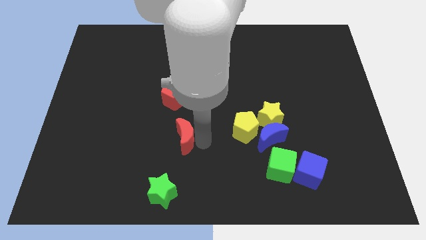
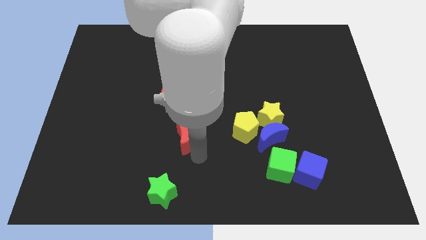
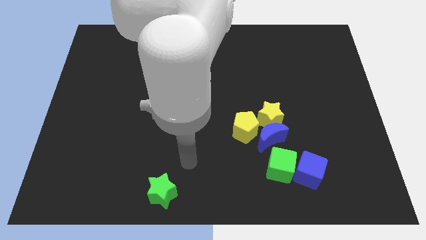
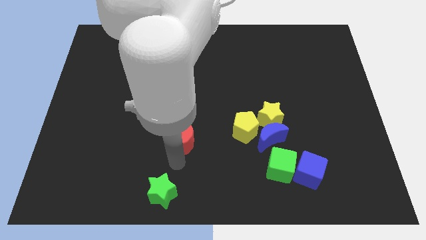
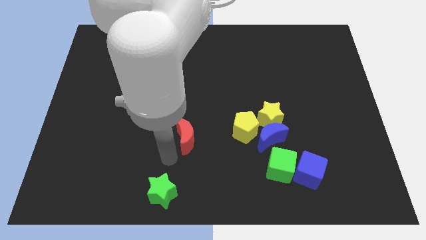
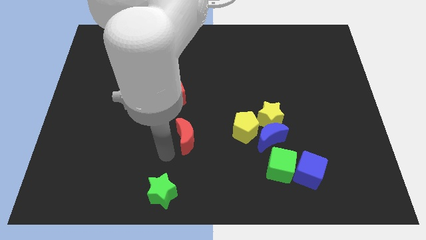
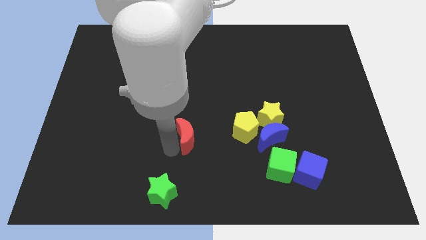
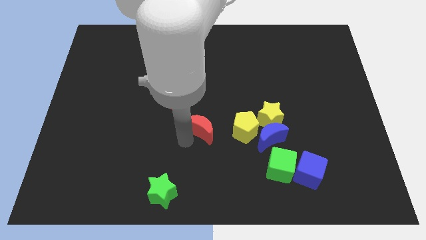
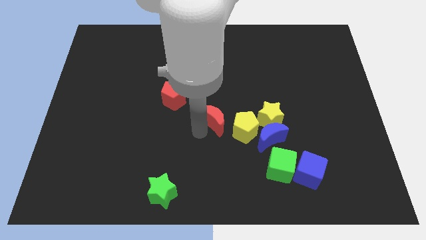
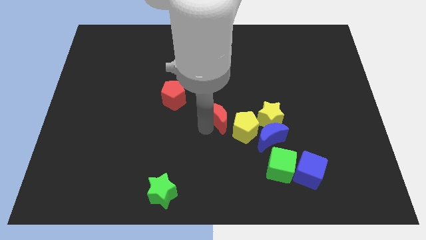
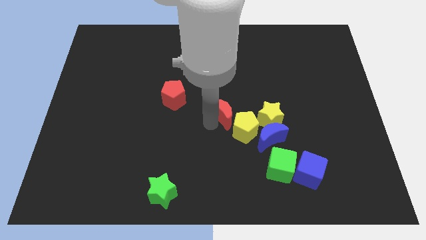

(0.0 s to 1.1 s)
place red moon to the center

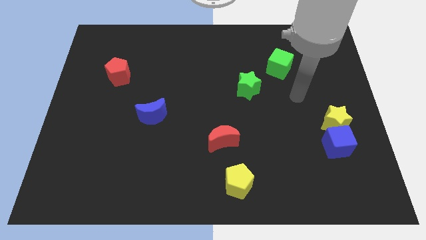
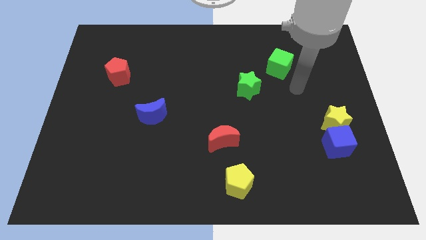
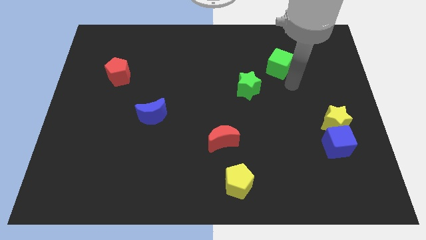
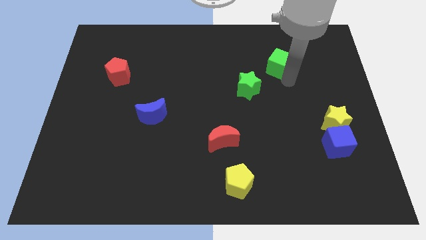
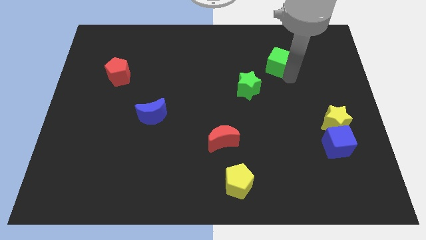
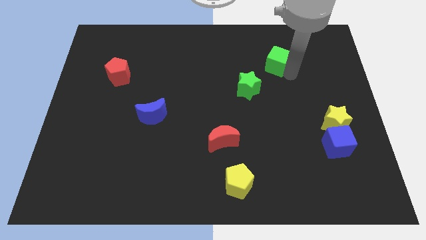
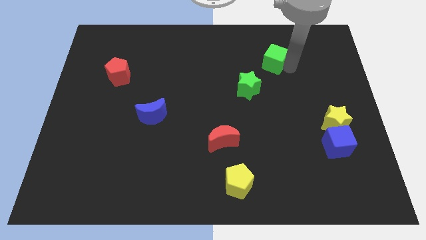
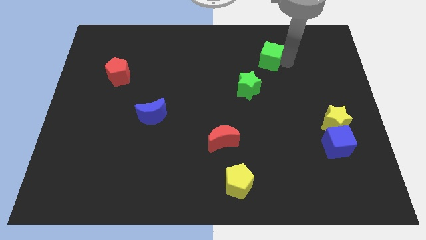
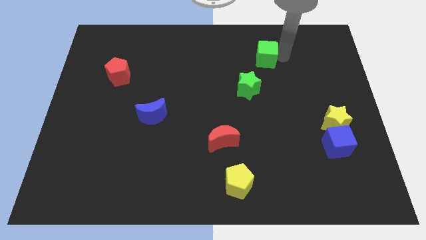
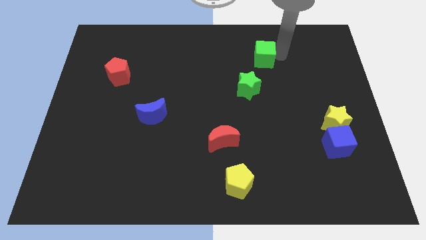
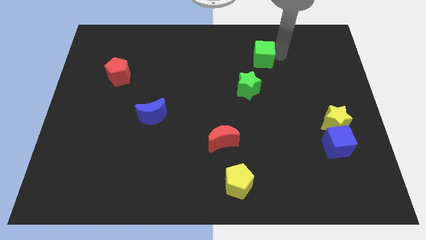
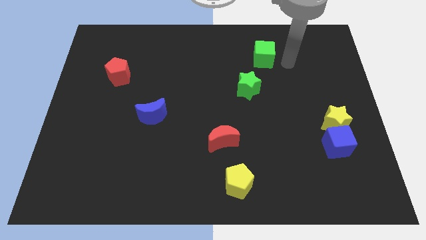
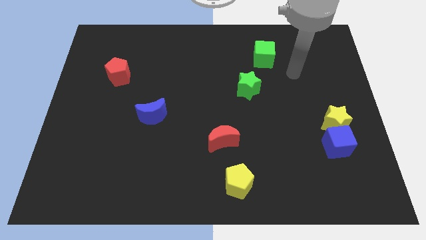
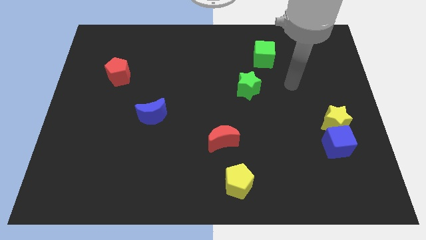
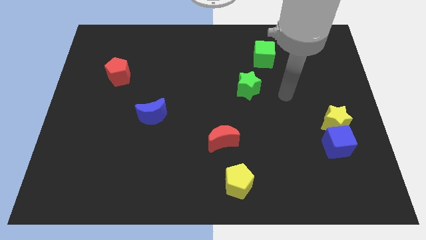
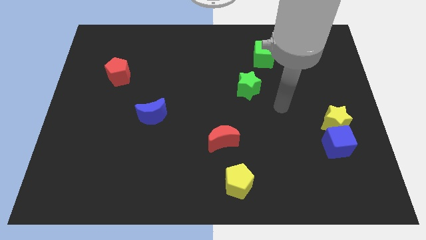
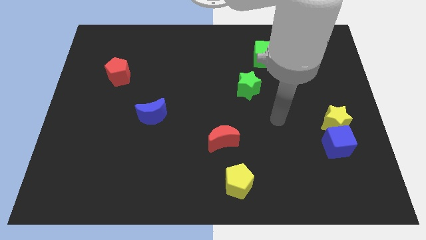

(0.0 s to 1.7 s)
slide the green cube slightly up

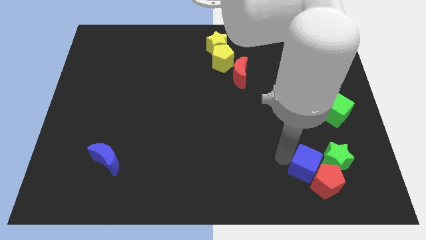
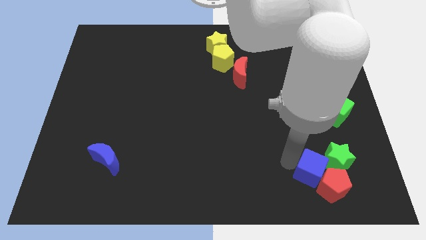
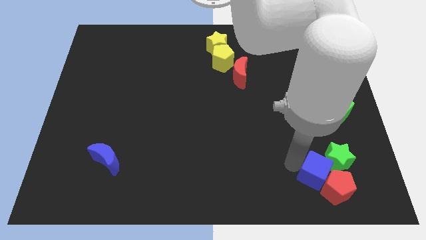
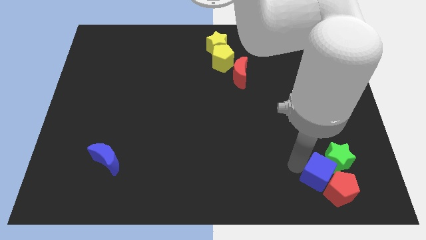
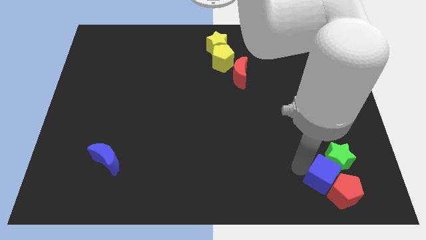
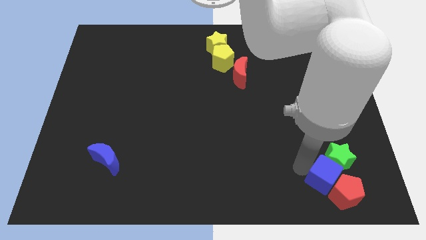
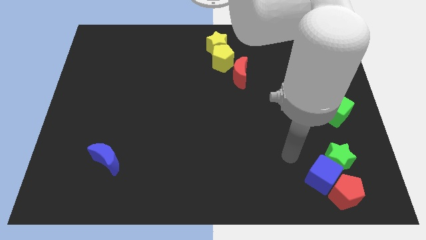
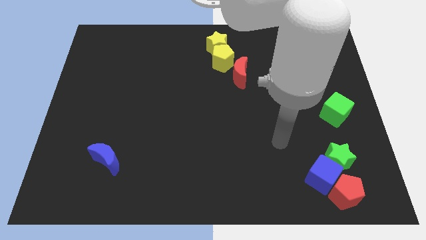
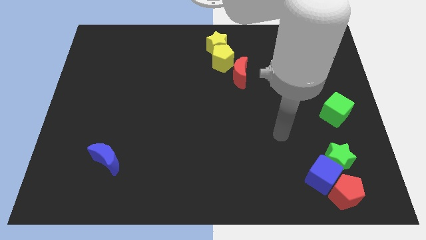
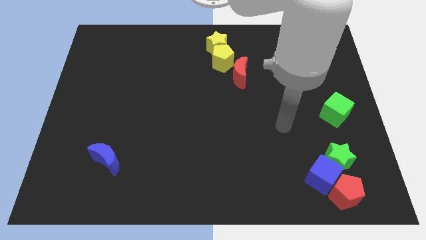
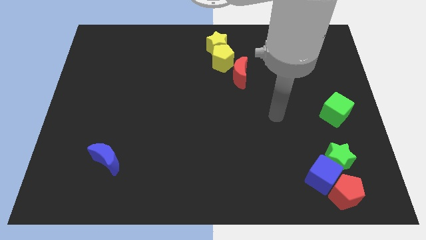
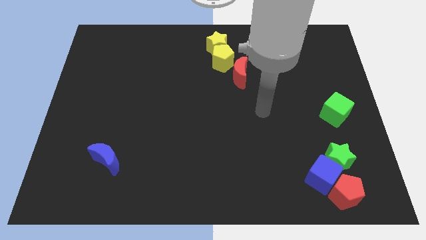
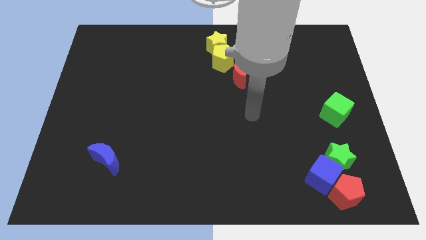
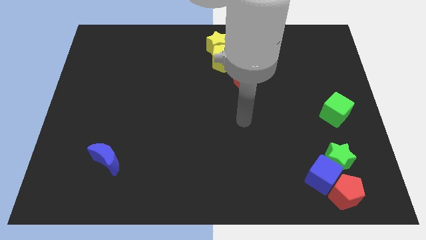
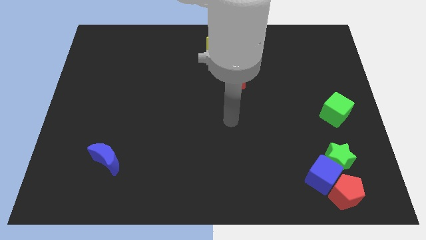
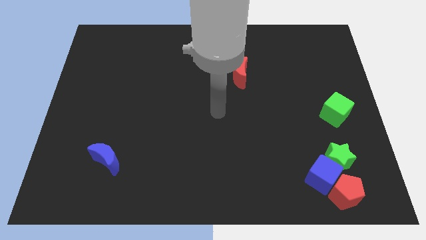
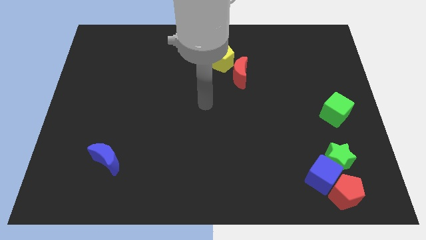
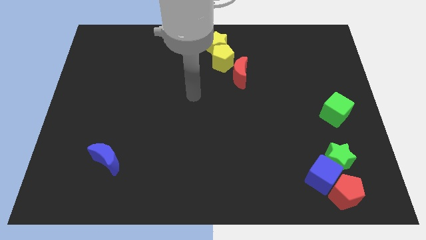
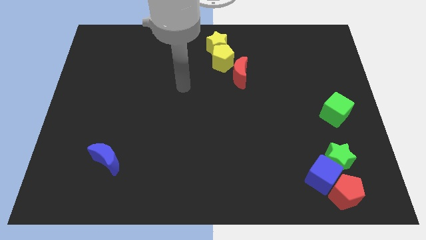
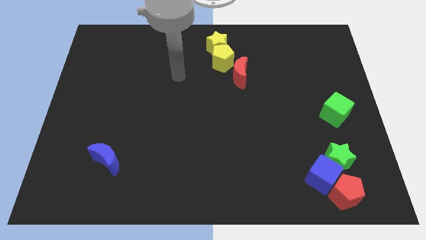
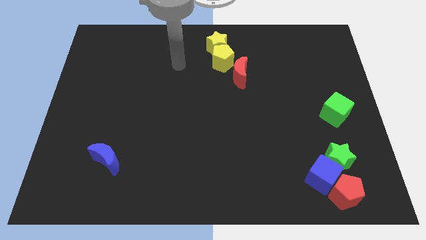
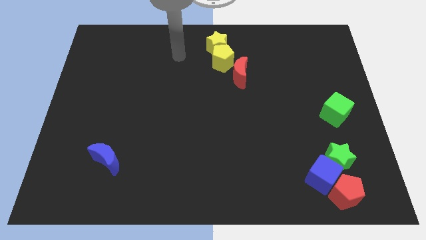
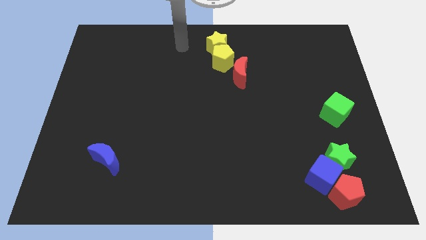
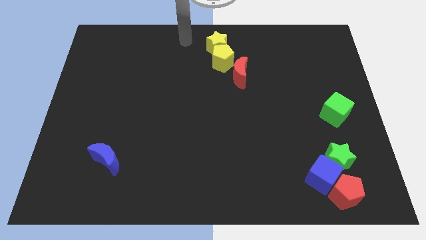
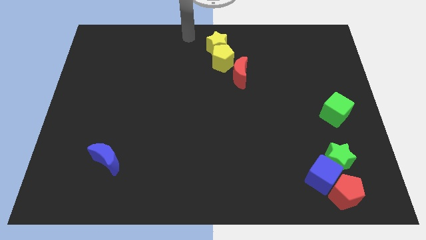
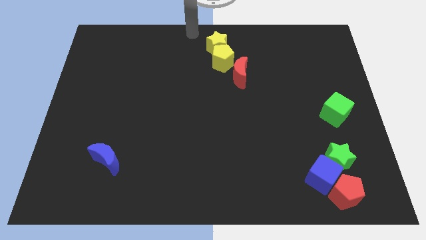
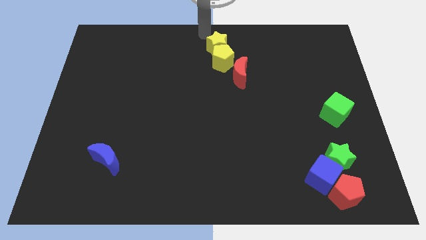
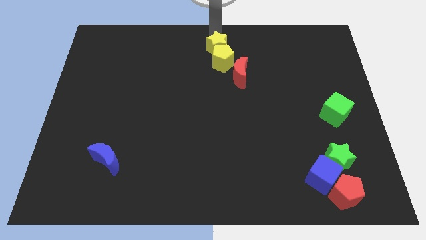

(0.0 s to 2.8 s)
move your arm to the top center of the board

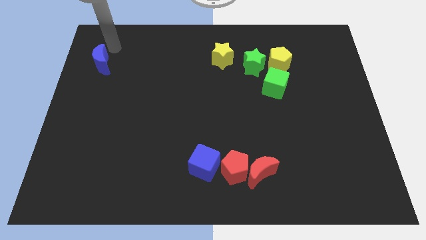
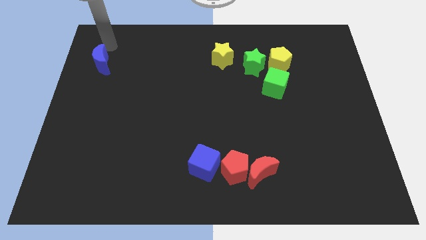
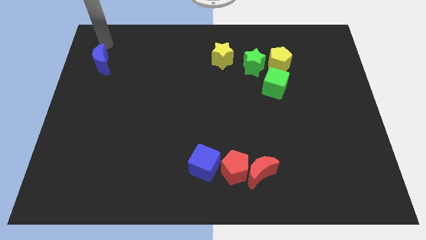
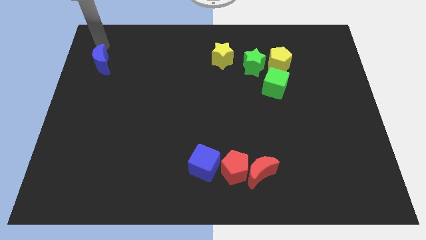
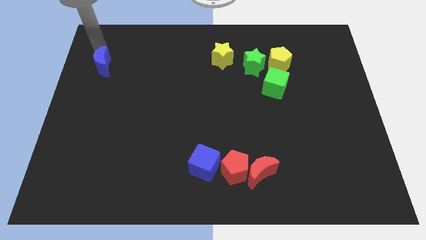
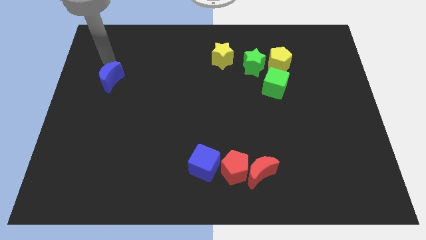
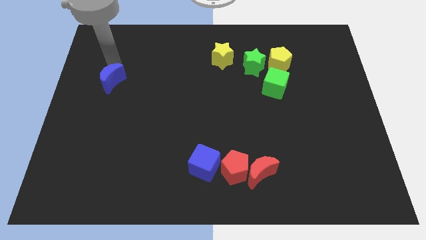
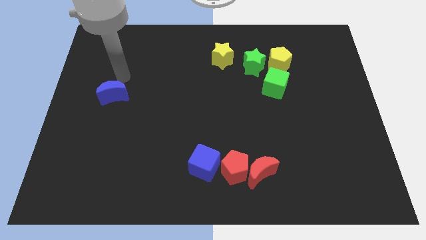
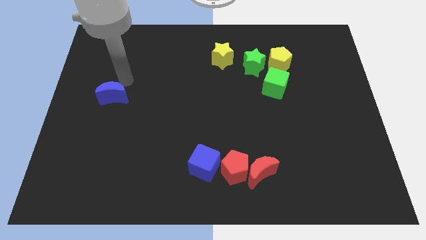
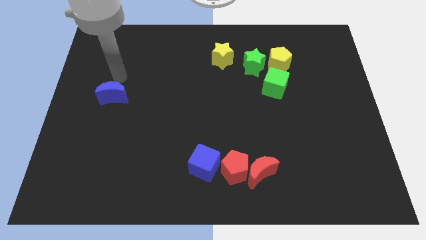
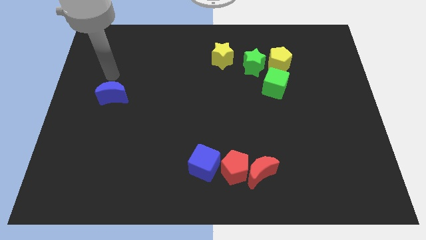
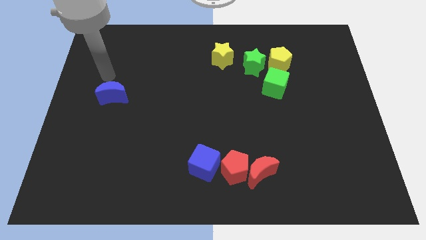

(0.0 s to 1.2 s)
move the blue crescent towards the left center of the board

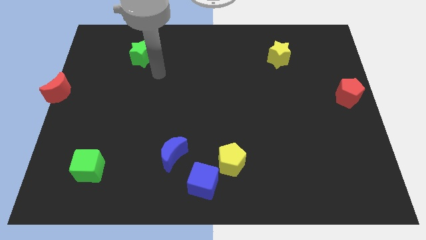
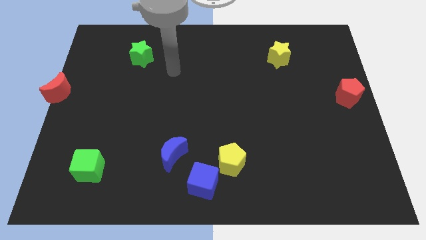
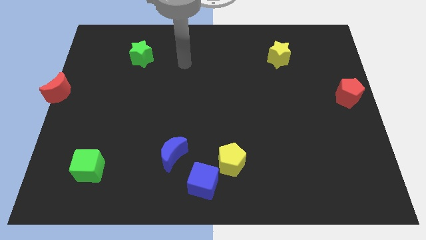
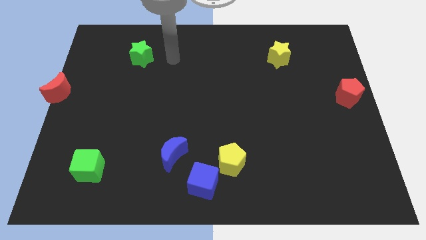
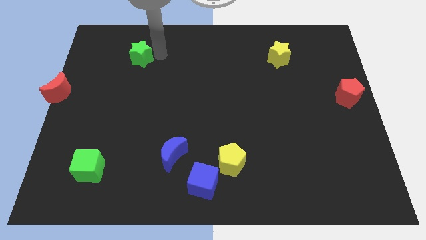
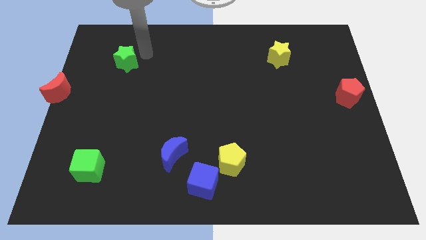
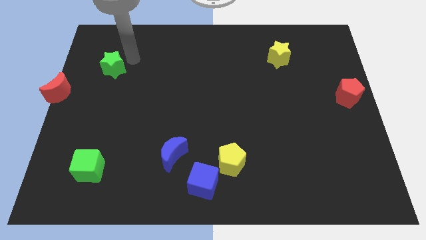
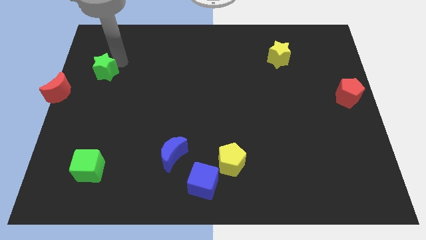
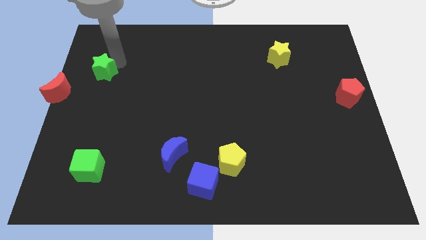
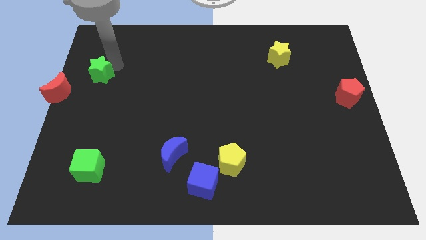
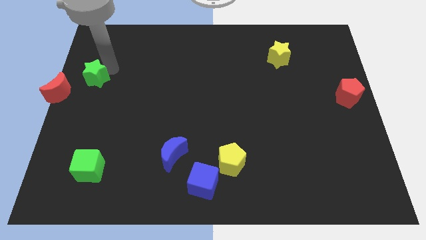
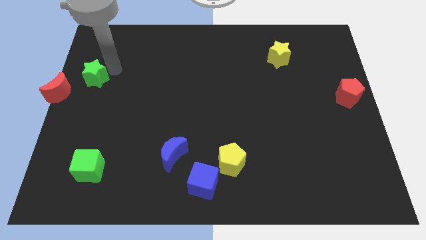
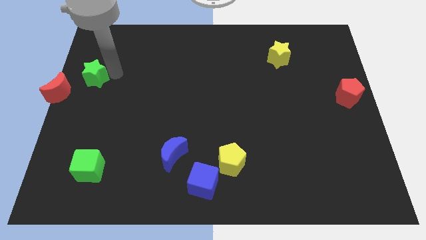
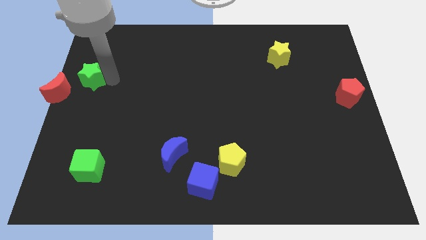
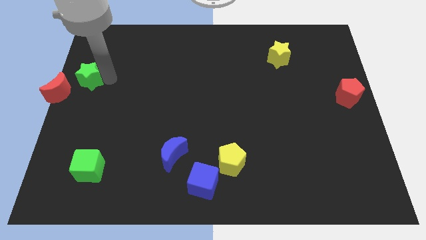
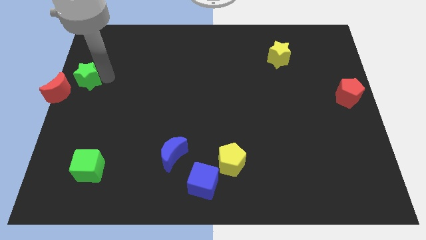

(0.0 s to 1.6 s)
push the green star close to the red moon

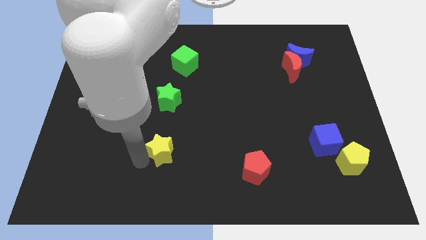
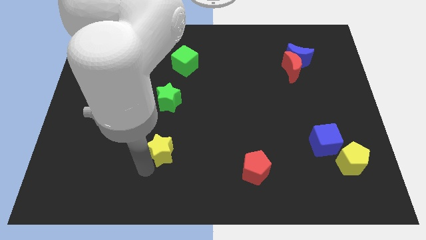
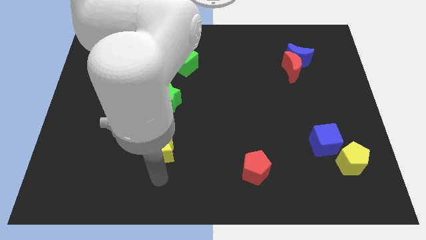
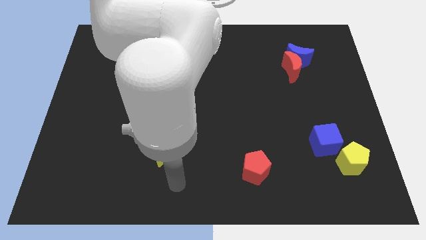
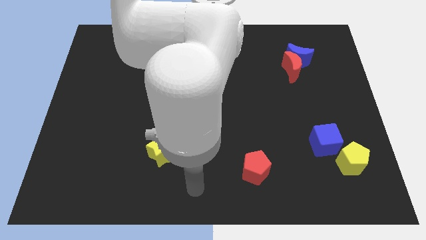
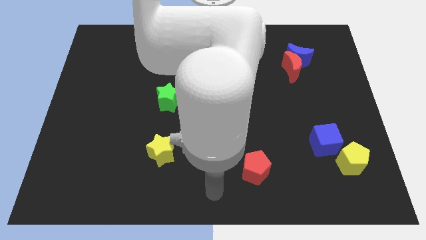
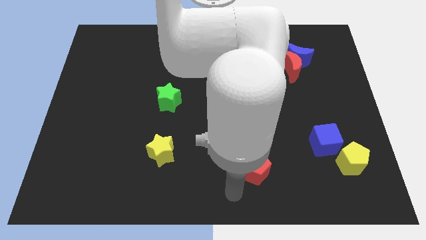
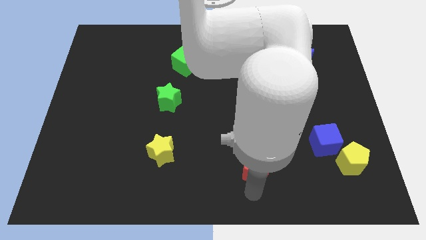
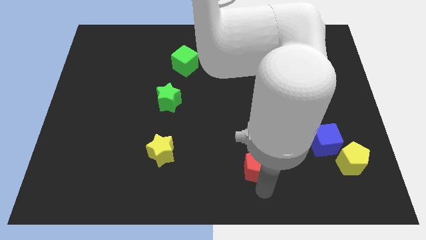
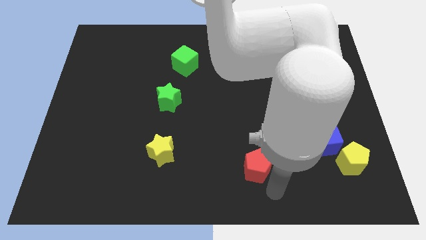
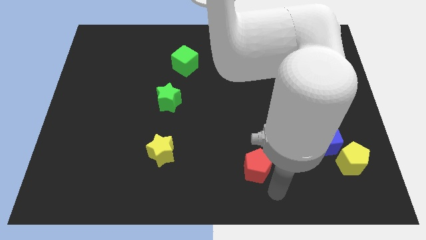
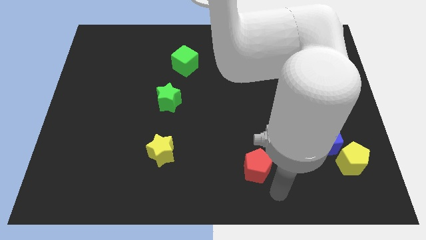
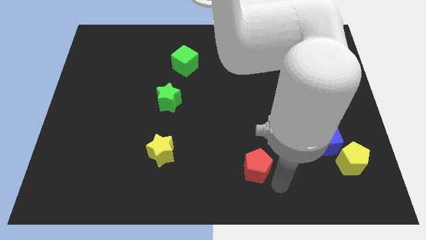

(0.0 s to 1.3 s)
place your arm to the bottom right of the red crescent
